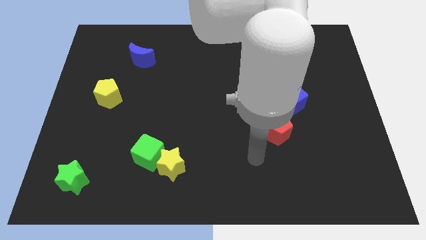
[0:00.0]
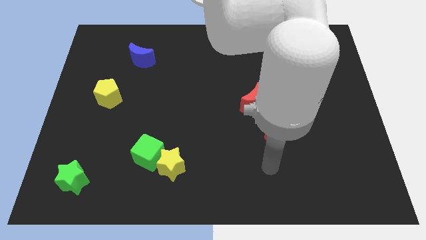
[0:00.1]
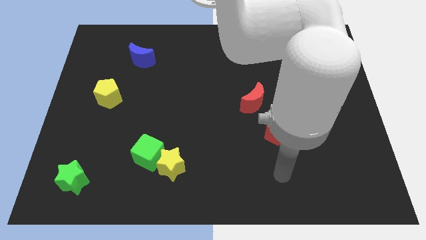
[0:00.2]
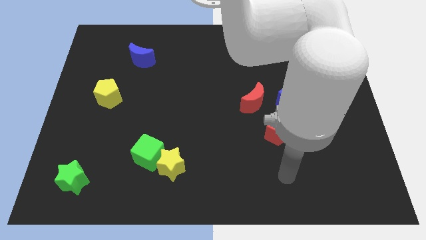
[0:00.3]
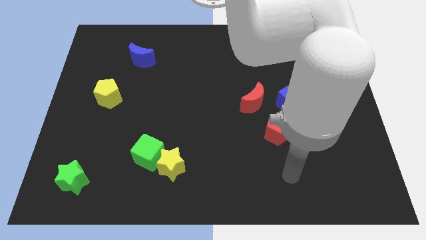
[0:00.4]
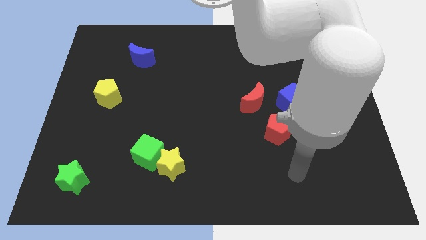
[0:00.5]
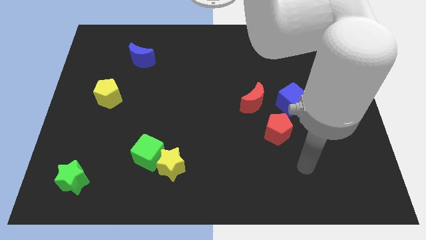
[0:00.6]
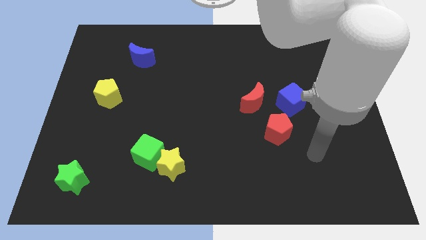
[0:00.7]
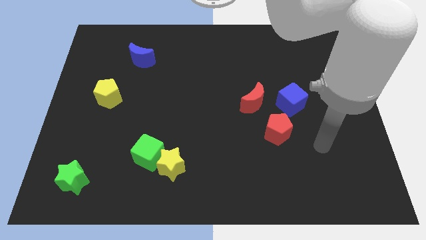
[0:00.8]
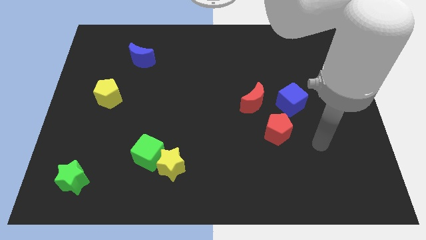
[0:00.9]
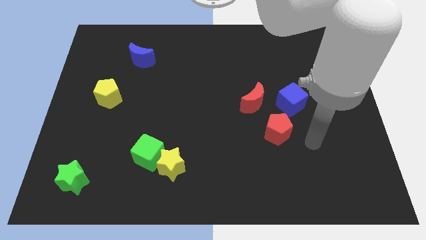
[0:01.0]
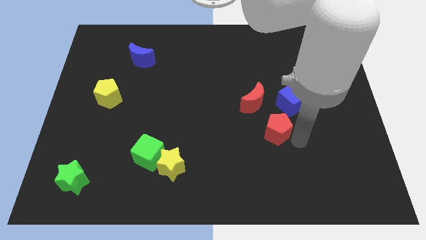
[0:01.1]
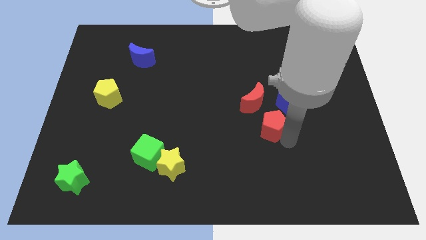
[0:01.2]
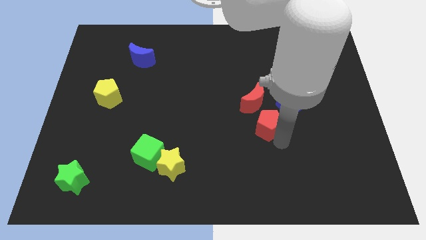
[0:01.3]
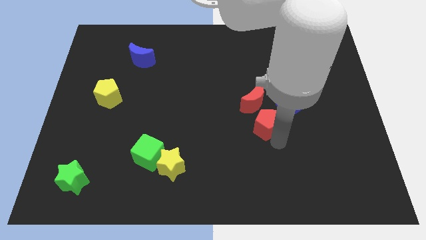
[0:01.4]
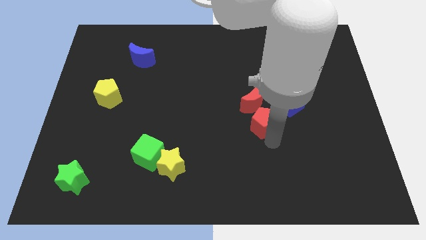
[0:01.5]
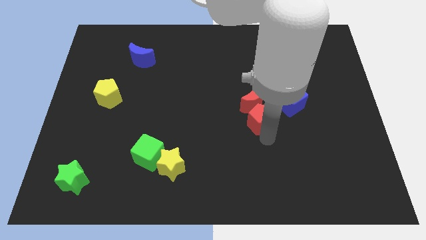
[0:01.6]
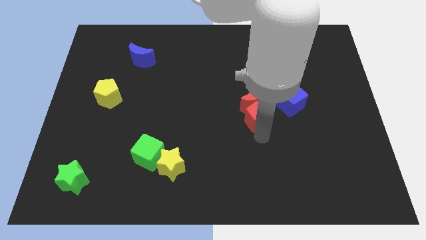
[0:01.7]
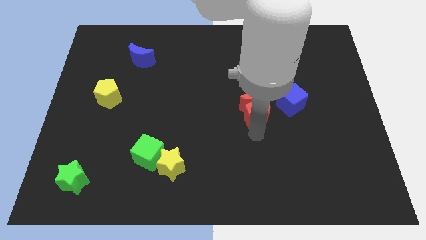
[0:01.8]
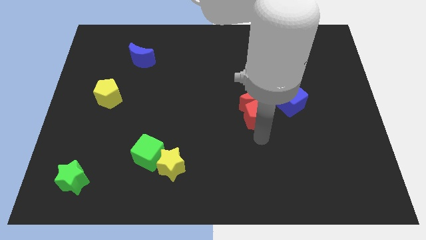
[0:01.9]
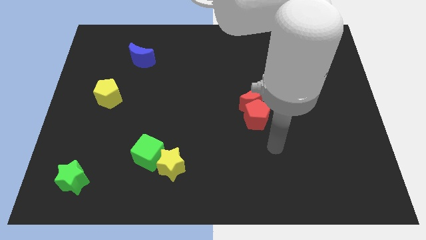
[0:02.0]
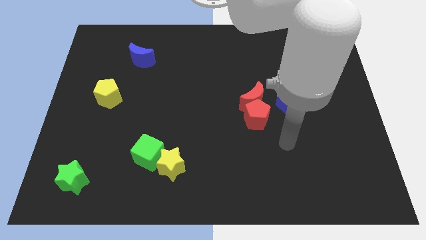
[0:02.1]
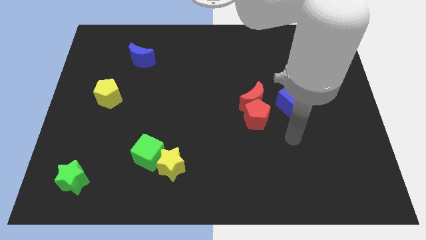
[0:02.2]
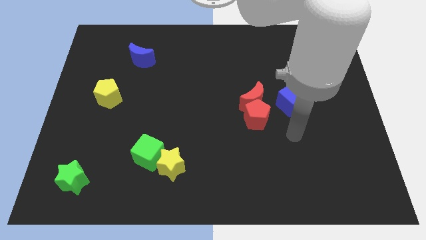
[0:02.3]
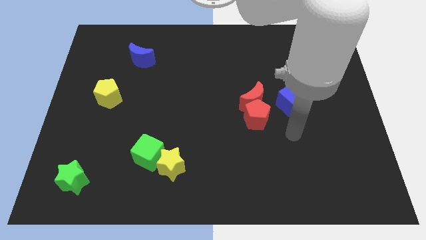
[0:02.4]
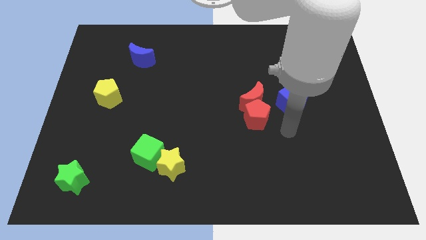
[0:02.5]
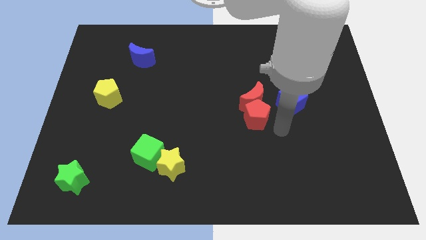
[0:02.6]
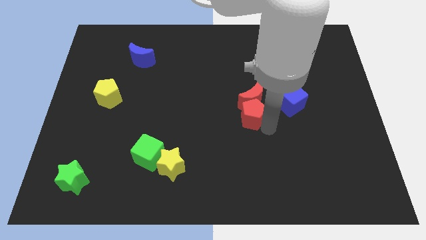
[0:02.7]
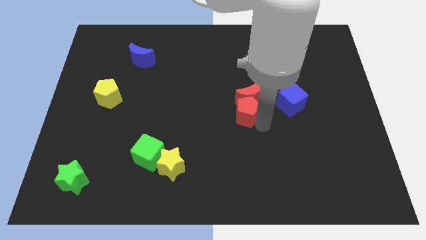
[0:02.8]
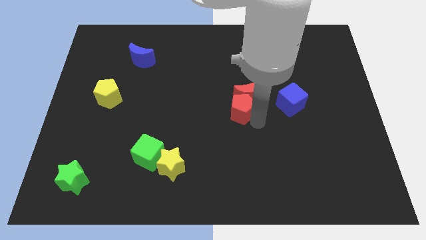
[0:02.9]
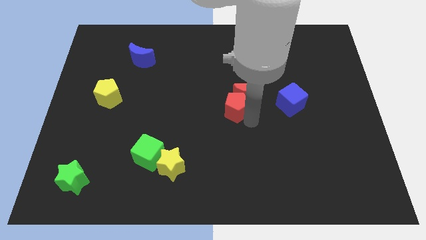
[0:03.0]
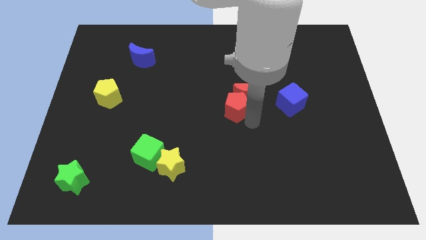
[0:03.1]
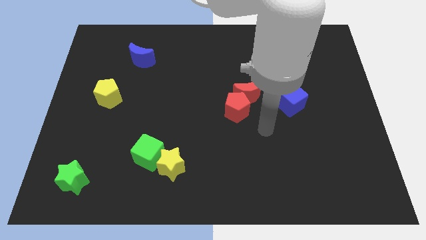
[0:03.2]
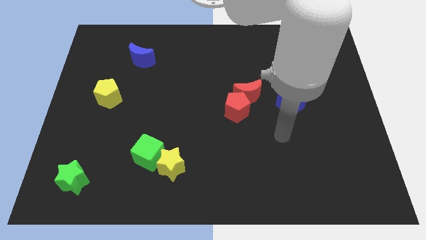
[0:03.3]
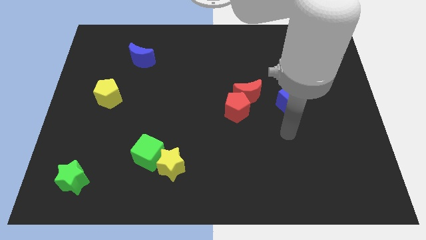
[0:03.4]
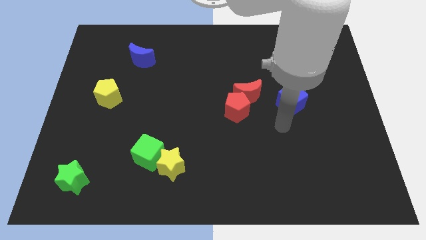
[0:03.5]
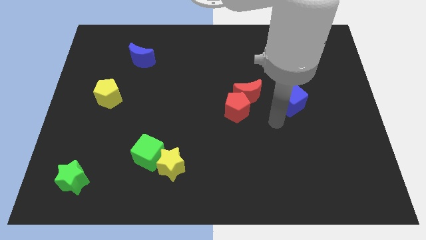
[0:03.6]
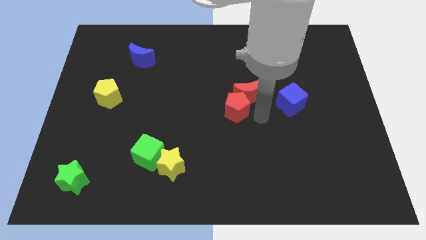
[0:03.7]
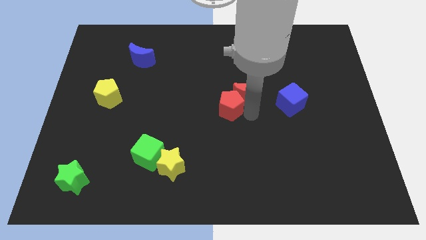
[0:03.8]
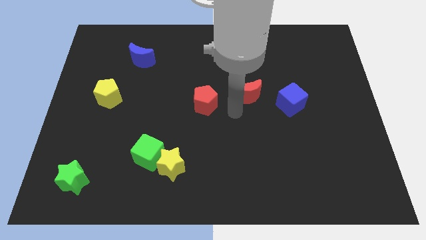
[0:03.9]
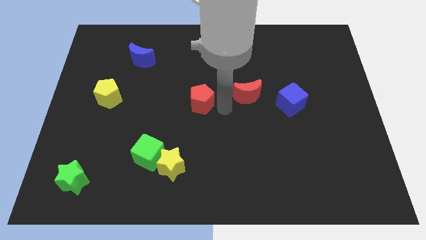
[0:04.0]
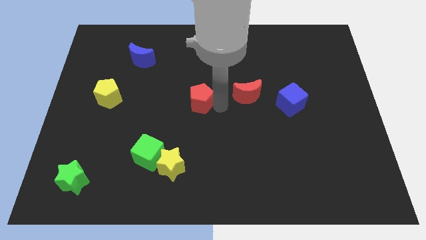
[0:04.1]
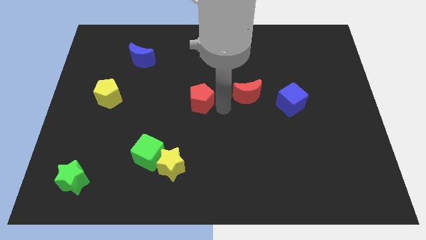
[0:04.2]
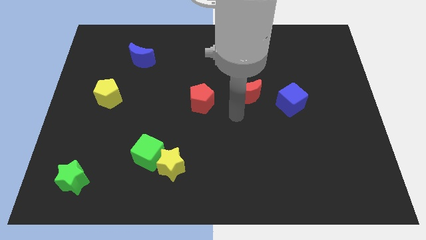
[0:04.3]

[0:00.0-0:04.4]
place the red pentagon parallel left to the red moon

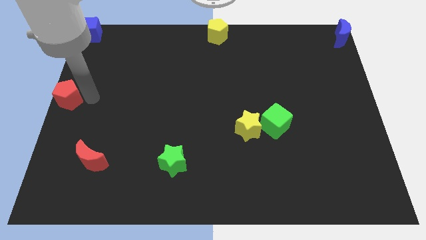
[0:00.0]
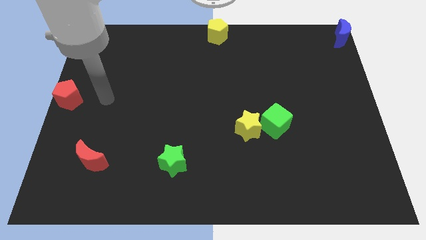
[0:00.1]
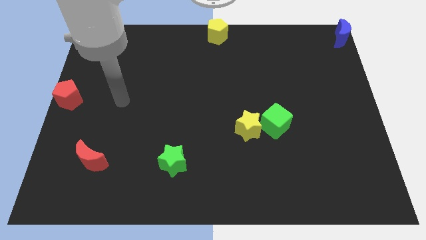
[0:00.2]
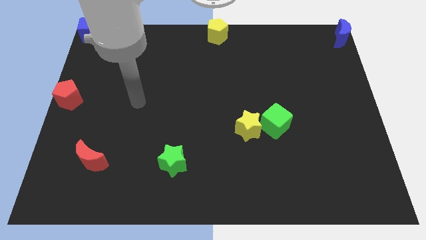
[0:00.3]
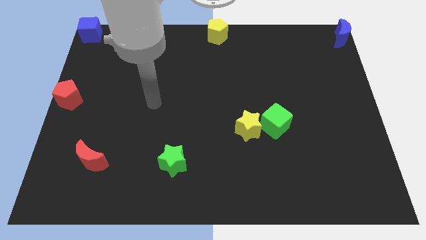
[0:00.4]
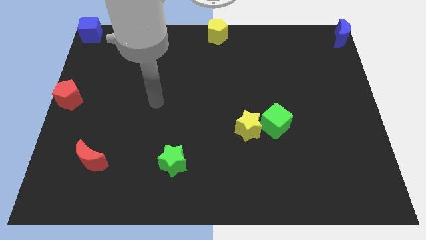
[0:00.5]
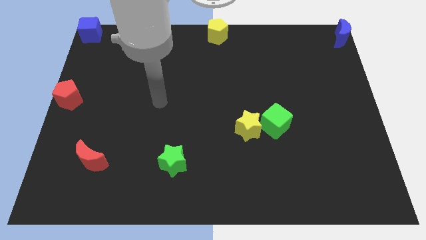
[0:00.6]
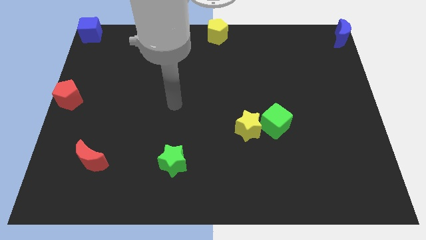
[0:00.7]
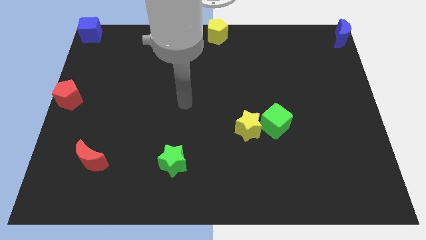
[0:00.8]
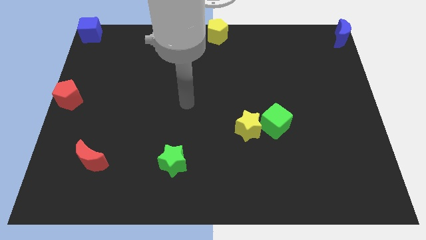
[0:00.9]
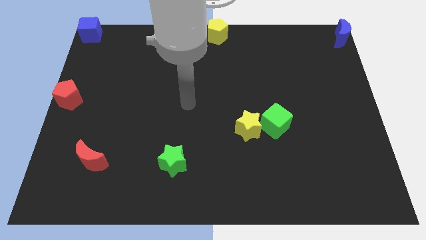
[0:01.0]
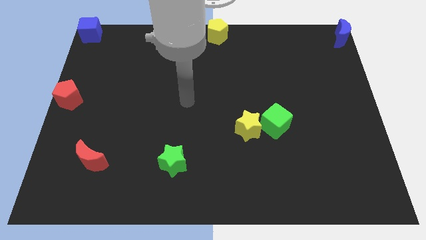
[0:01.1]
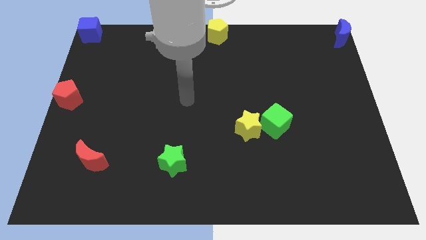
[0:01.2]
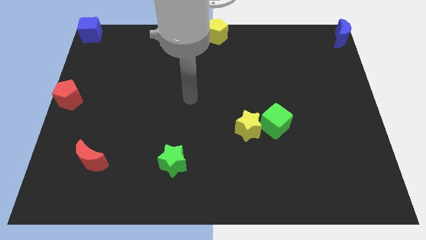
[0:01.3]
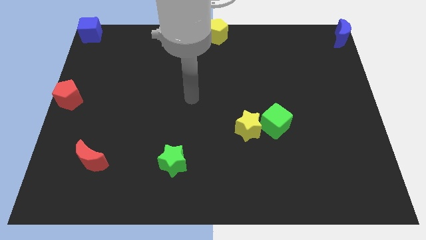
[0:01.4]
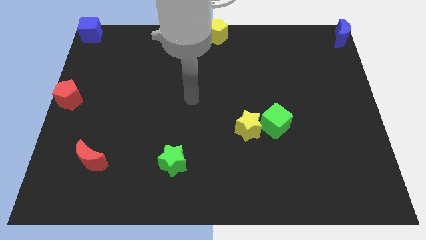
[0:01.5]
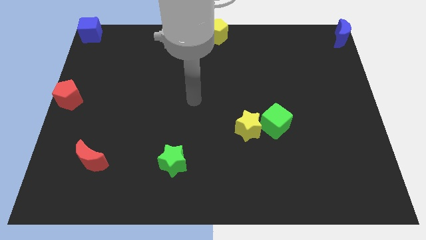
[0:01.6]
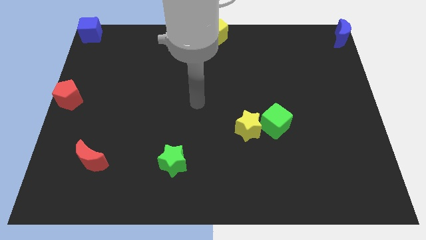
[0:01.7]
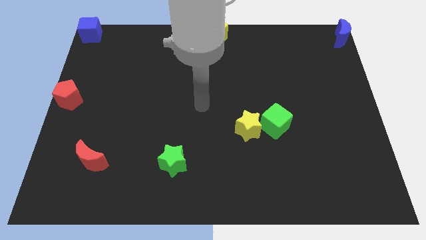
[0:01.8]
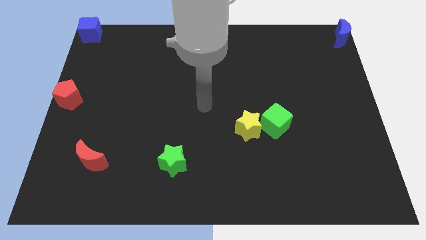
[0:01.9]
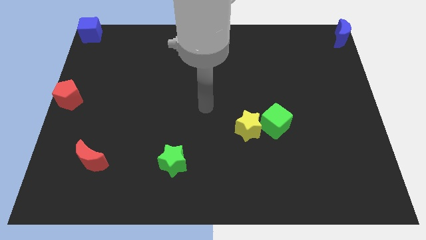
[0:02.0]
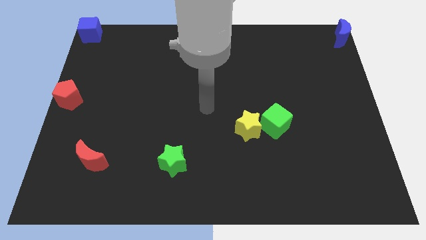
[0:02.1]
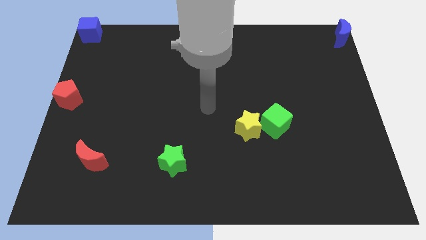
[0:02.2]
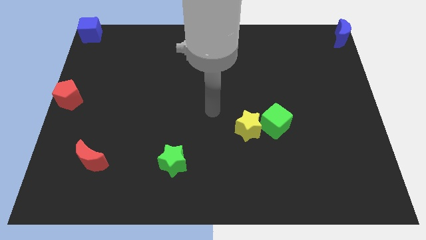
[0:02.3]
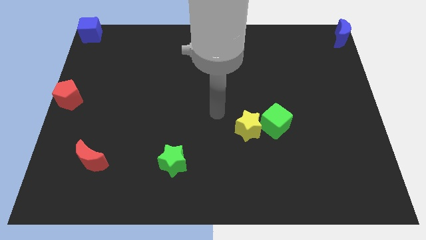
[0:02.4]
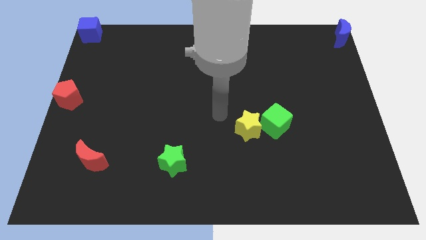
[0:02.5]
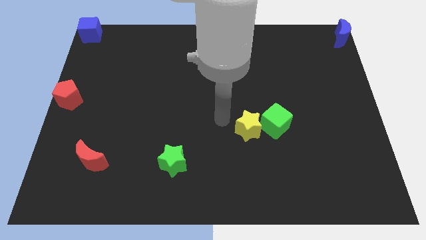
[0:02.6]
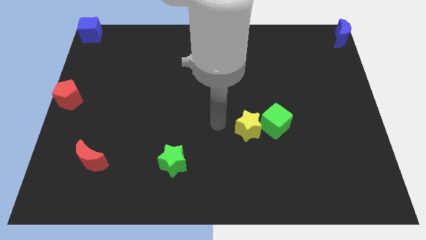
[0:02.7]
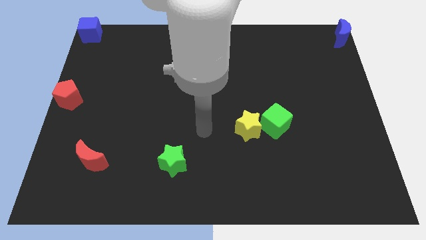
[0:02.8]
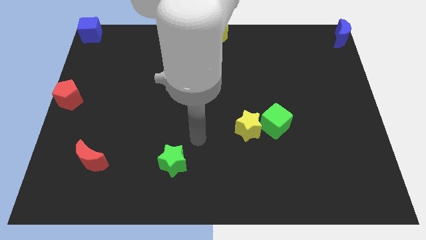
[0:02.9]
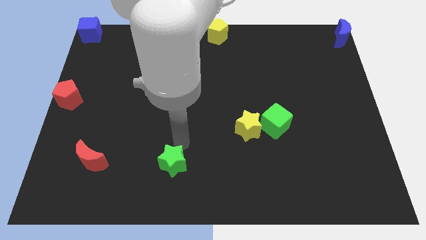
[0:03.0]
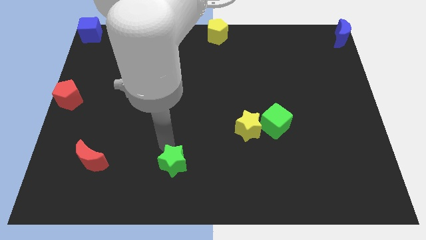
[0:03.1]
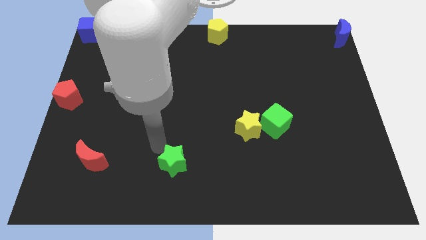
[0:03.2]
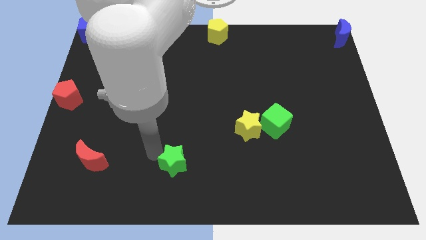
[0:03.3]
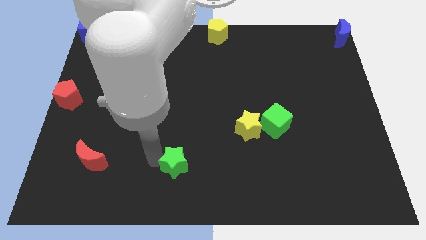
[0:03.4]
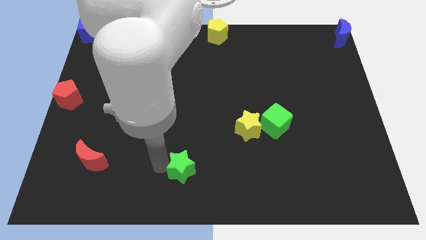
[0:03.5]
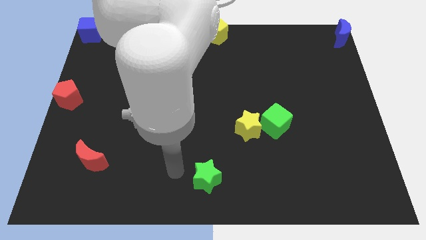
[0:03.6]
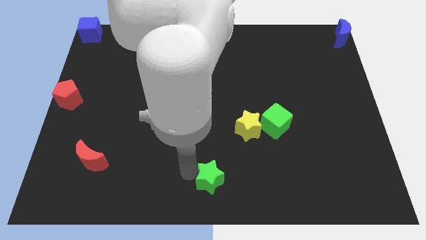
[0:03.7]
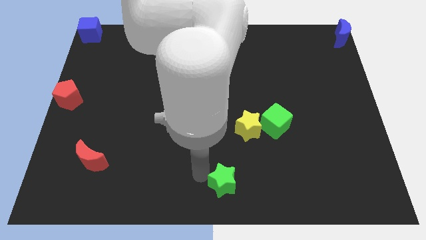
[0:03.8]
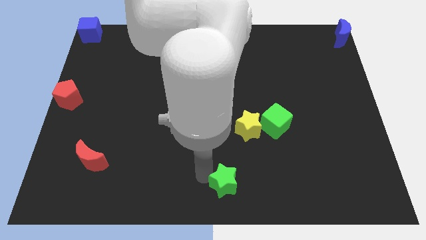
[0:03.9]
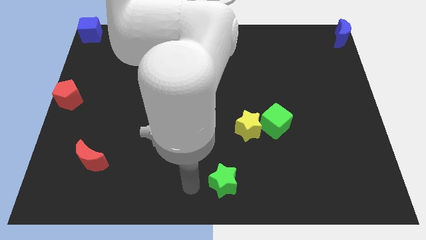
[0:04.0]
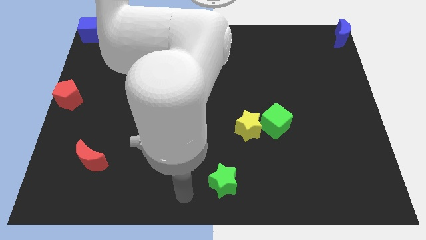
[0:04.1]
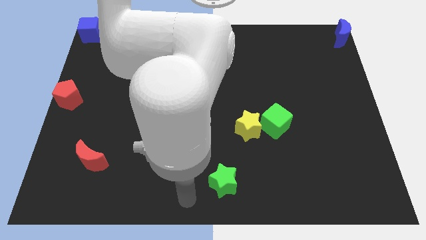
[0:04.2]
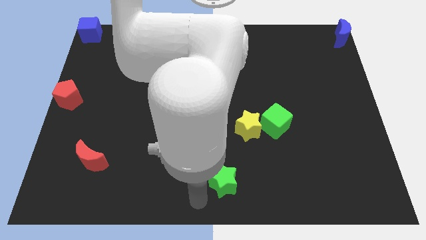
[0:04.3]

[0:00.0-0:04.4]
push the green star to the bottom center of the board
